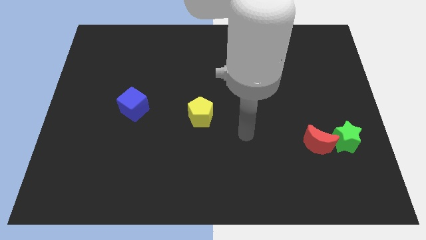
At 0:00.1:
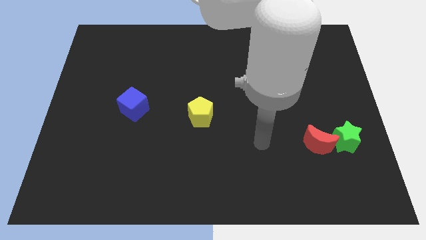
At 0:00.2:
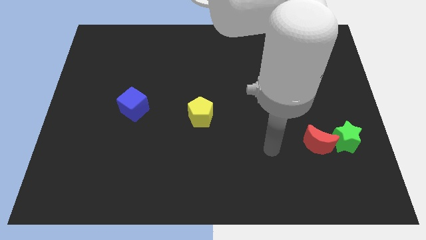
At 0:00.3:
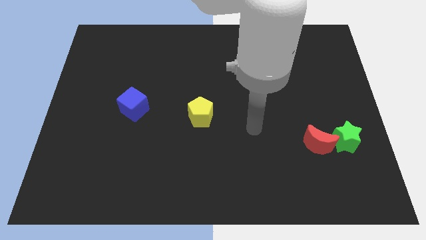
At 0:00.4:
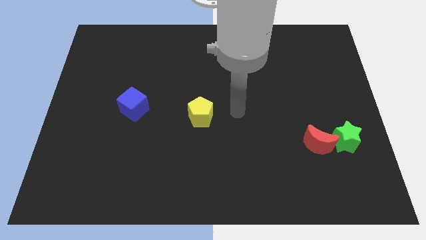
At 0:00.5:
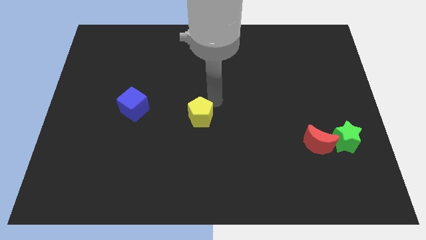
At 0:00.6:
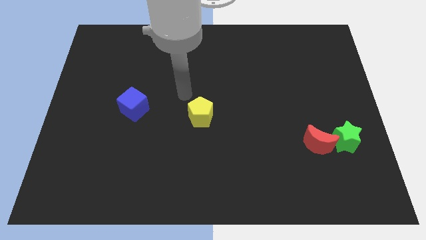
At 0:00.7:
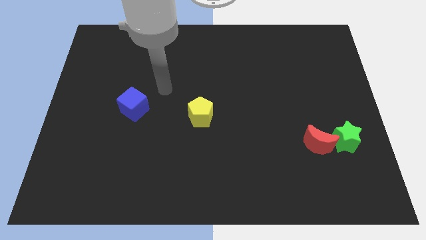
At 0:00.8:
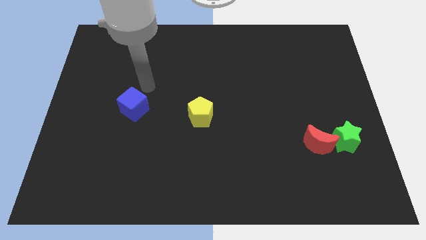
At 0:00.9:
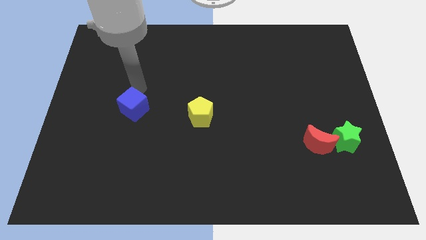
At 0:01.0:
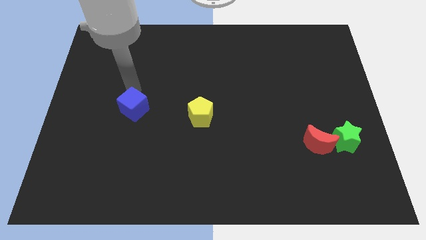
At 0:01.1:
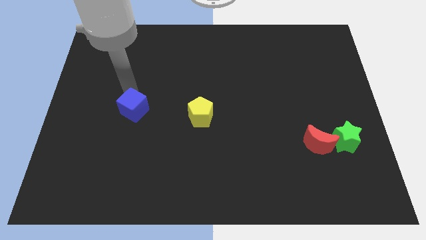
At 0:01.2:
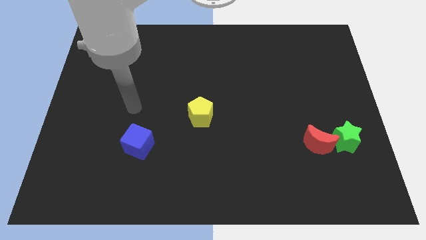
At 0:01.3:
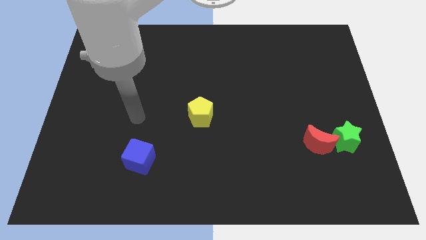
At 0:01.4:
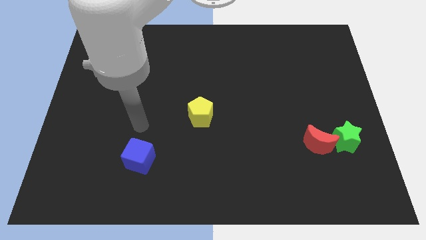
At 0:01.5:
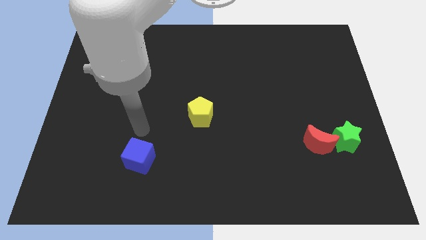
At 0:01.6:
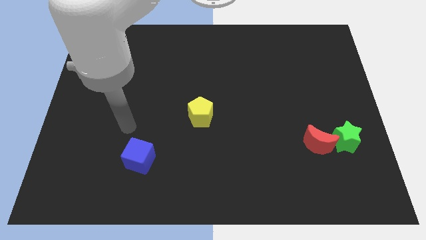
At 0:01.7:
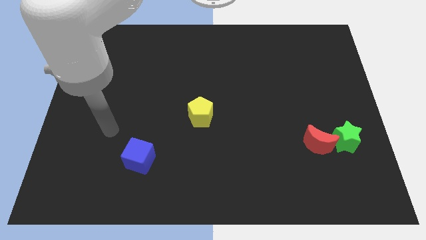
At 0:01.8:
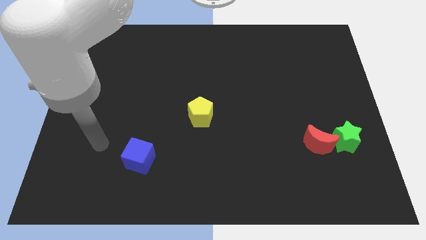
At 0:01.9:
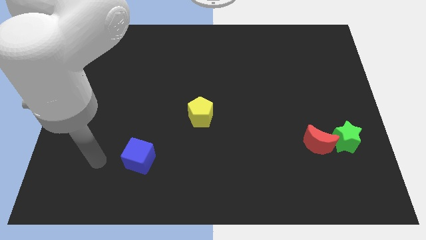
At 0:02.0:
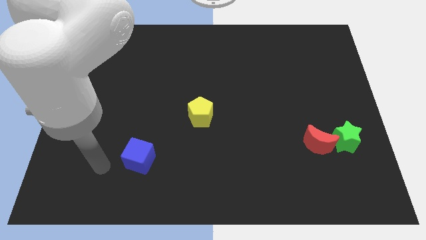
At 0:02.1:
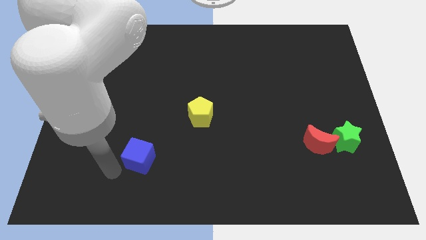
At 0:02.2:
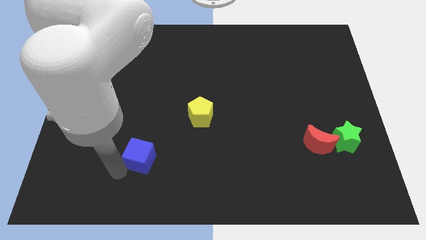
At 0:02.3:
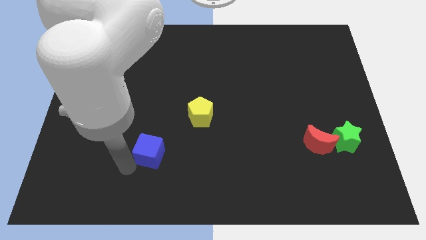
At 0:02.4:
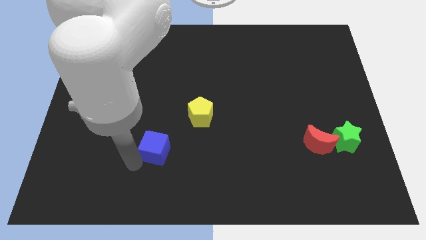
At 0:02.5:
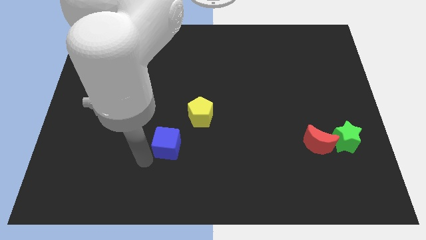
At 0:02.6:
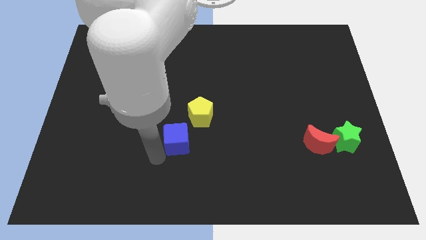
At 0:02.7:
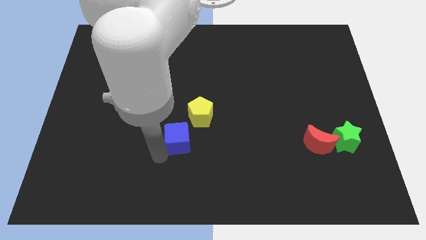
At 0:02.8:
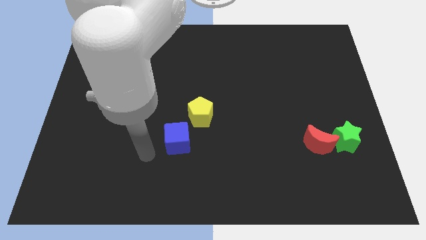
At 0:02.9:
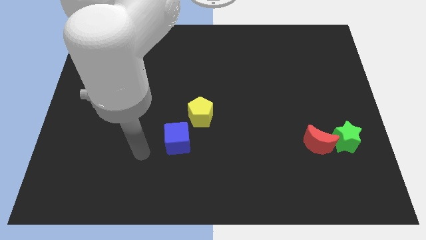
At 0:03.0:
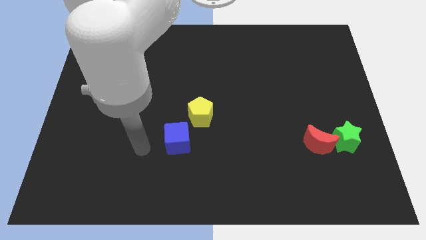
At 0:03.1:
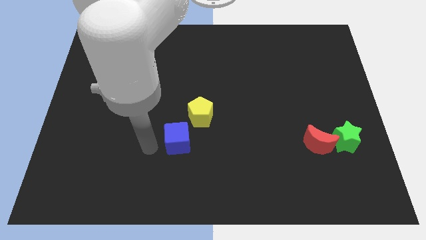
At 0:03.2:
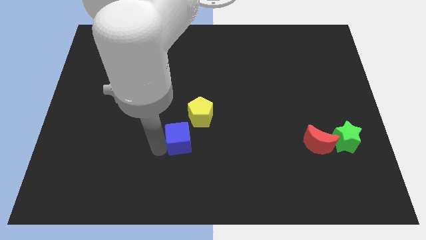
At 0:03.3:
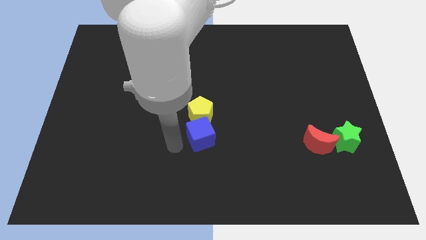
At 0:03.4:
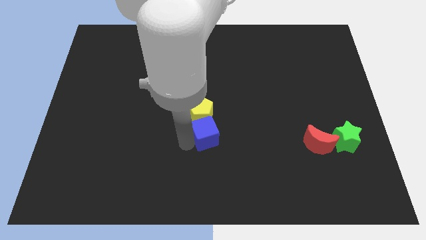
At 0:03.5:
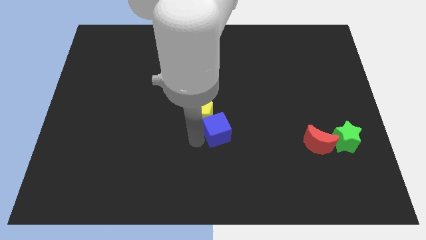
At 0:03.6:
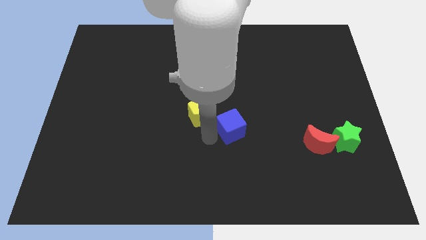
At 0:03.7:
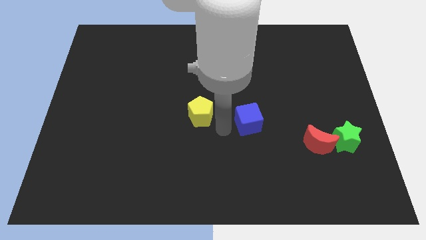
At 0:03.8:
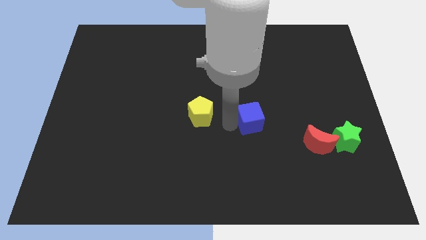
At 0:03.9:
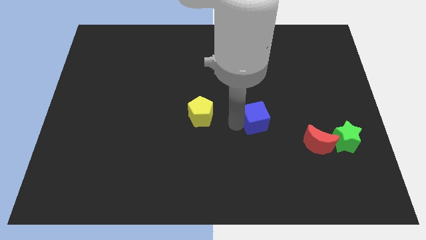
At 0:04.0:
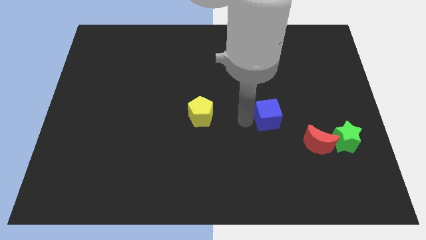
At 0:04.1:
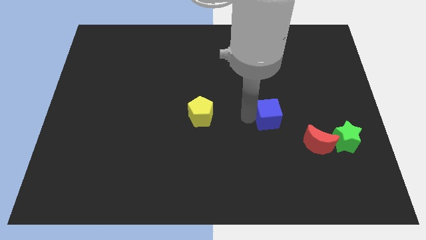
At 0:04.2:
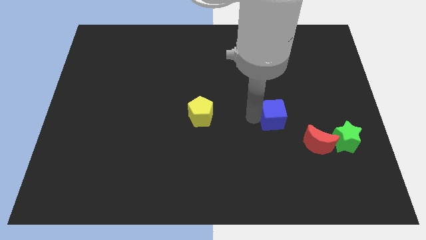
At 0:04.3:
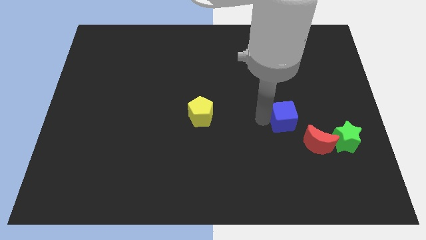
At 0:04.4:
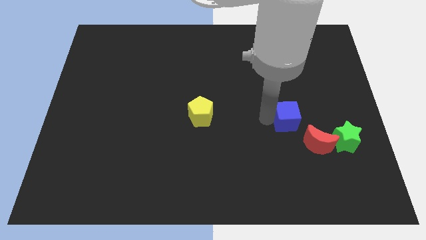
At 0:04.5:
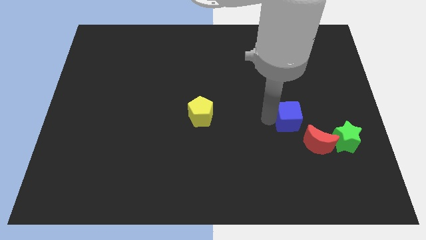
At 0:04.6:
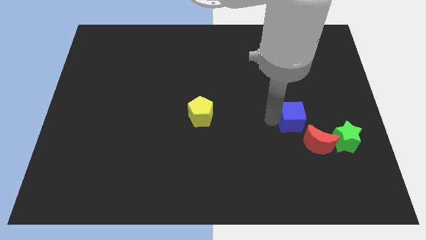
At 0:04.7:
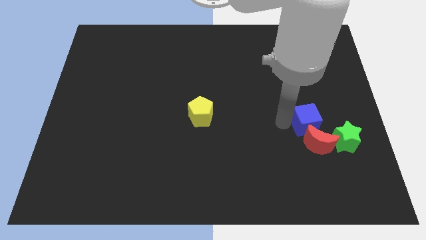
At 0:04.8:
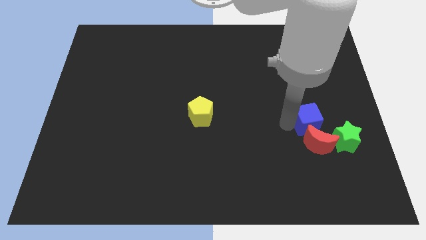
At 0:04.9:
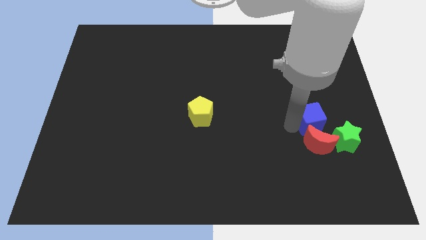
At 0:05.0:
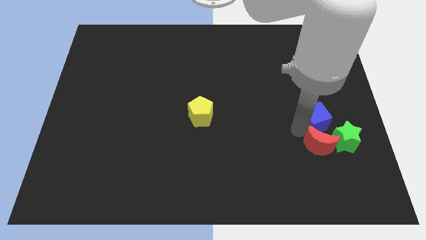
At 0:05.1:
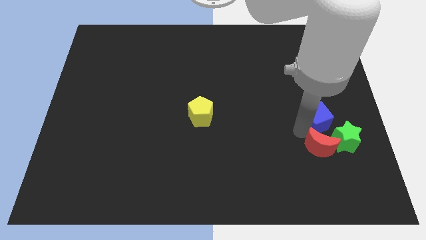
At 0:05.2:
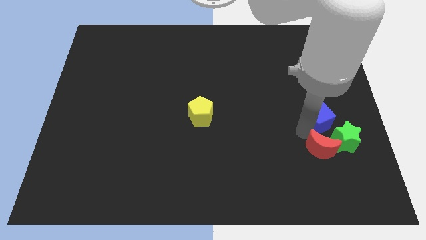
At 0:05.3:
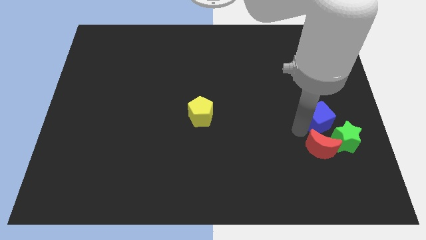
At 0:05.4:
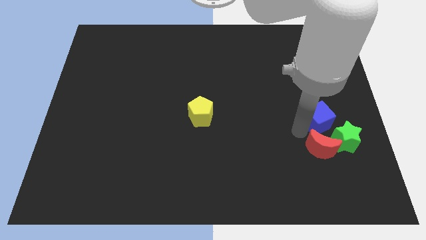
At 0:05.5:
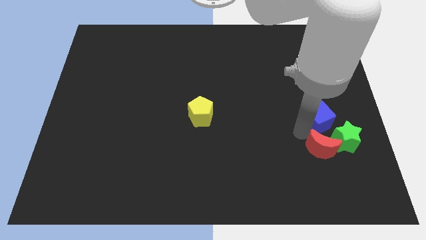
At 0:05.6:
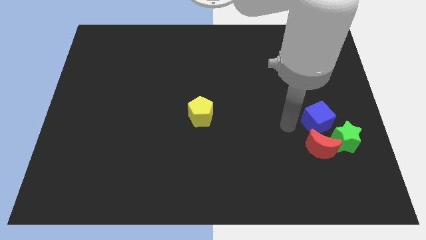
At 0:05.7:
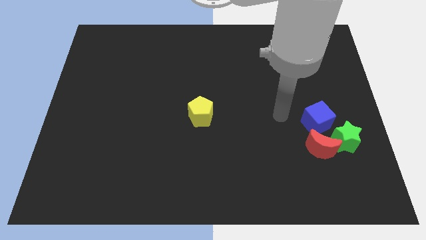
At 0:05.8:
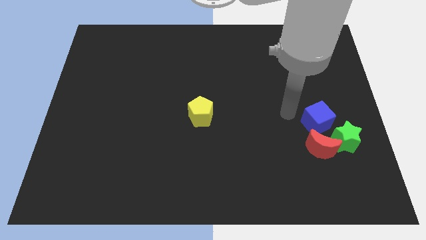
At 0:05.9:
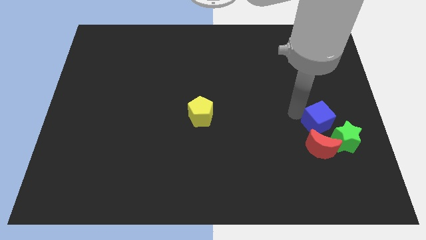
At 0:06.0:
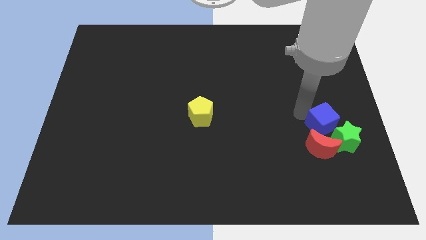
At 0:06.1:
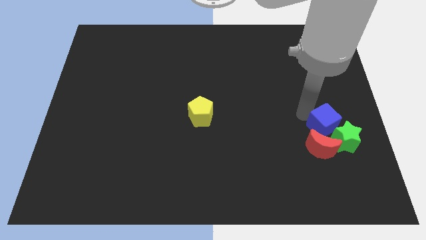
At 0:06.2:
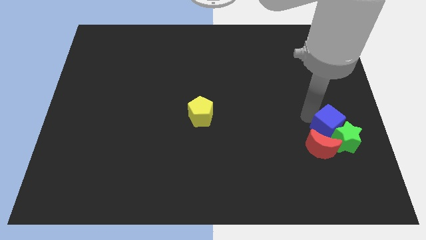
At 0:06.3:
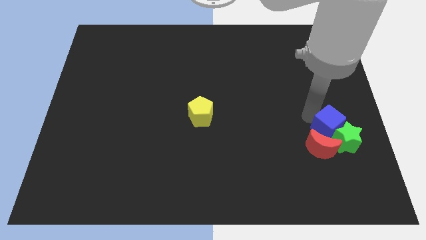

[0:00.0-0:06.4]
slide the blue block next to the green star

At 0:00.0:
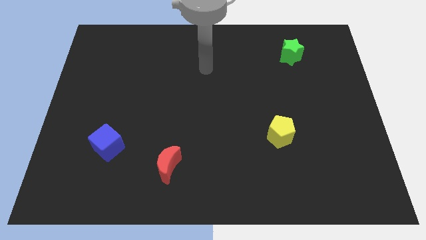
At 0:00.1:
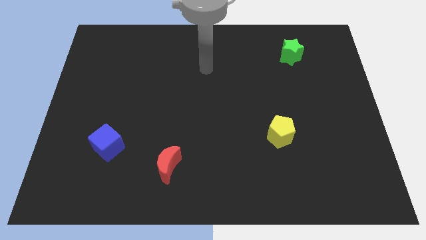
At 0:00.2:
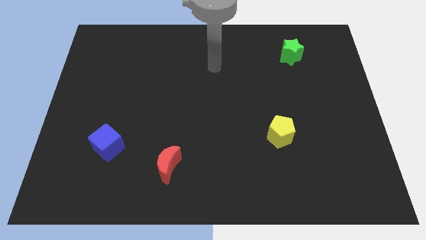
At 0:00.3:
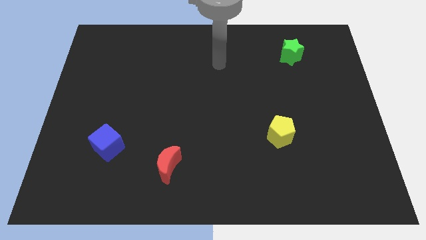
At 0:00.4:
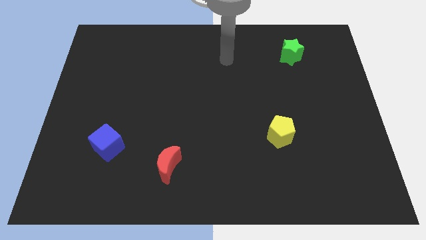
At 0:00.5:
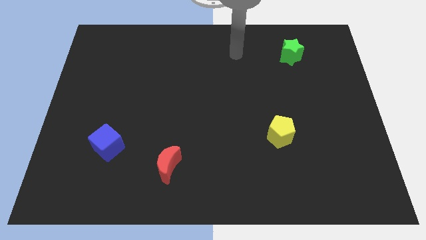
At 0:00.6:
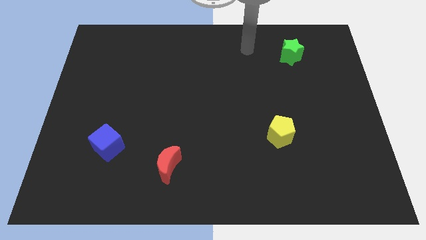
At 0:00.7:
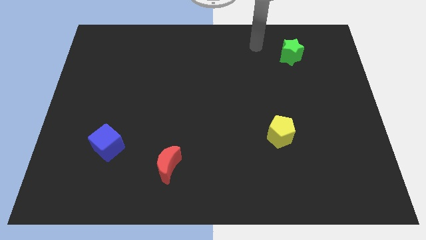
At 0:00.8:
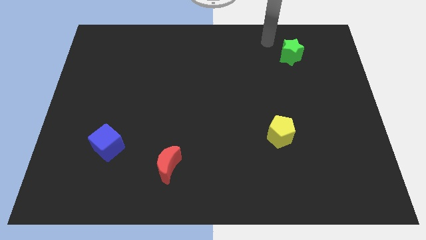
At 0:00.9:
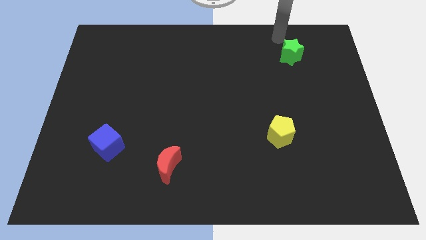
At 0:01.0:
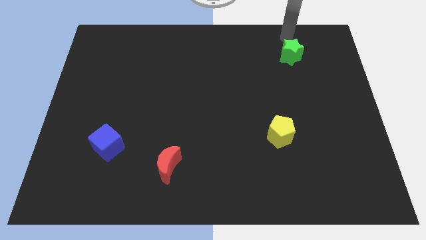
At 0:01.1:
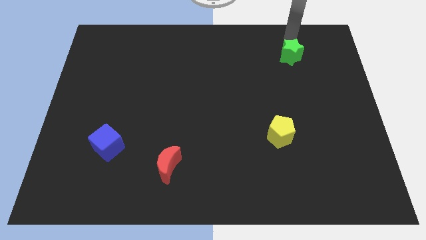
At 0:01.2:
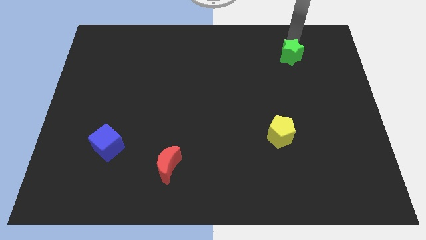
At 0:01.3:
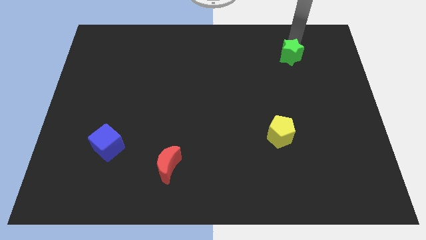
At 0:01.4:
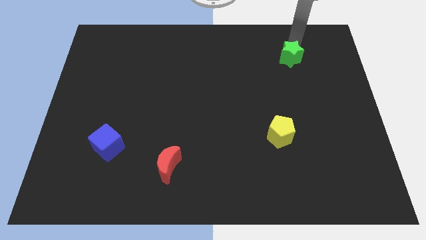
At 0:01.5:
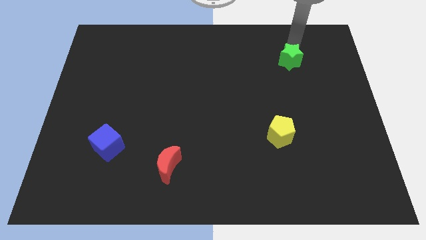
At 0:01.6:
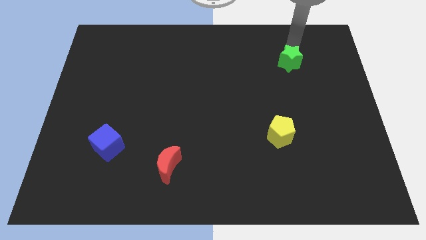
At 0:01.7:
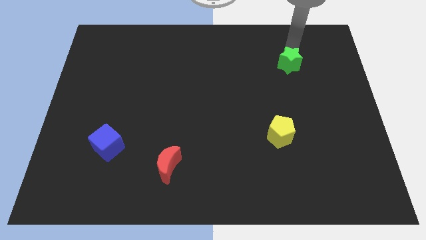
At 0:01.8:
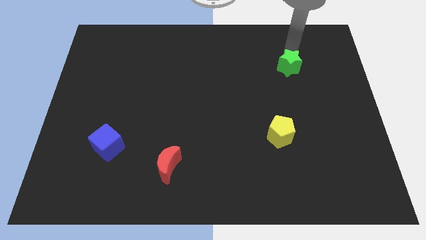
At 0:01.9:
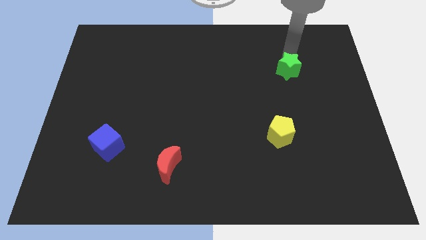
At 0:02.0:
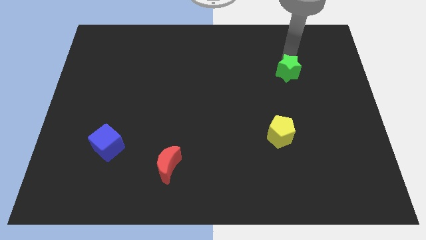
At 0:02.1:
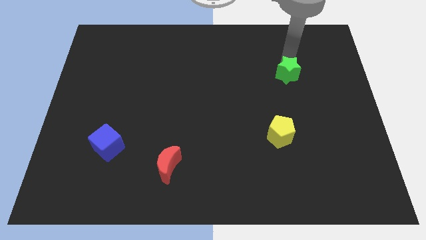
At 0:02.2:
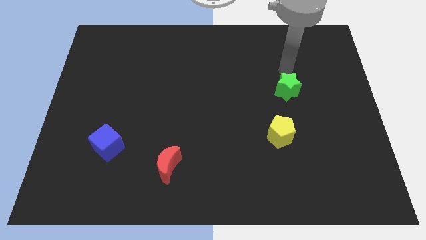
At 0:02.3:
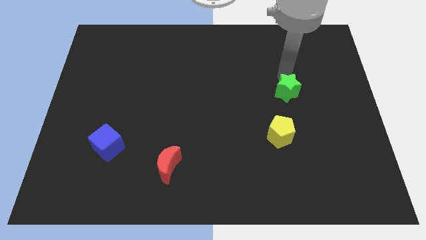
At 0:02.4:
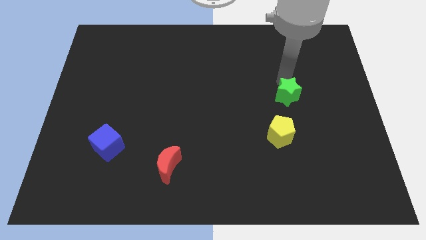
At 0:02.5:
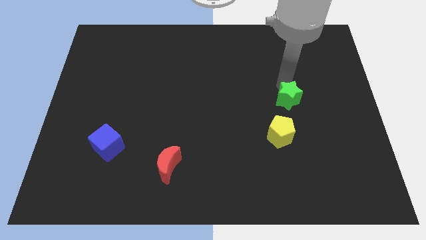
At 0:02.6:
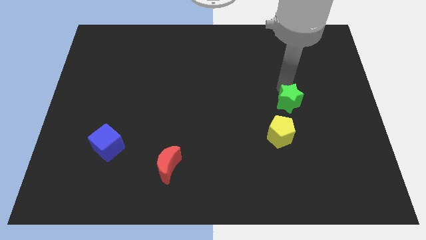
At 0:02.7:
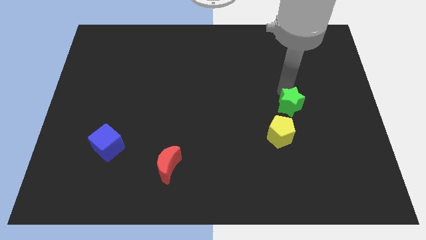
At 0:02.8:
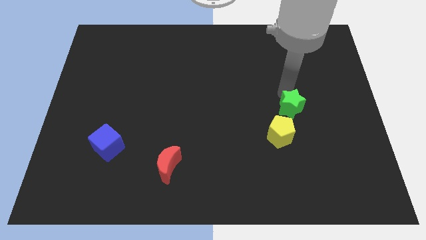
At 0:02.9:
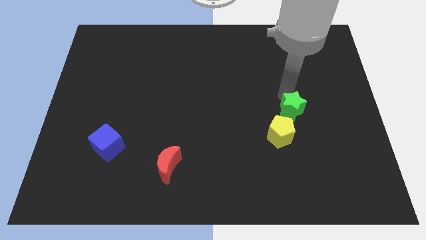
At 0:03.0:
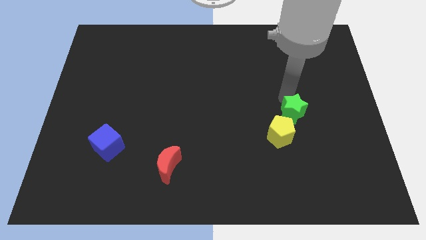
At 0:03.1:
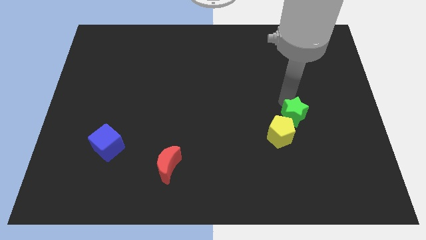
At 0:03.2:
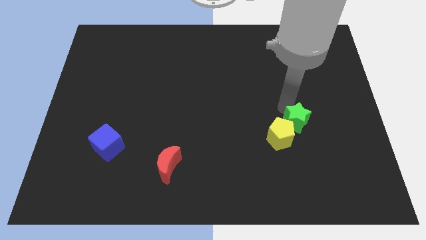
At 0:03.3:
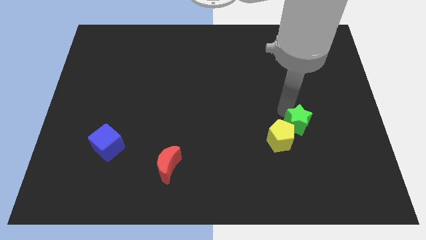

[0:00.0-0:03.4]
move the green star to the pentagon
